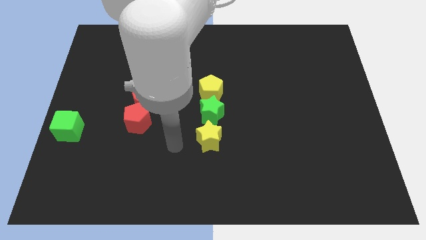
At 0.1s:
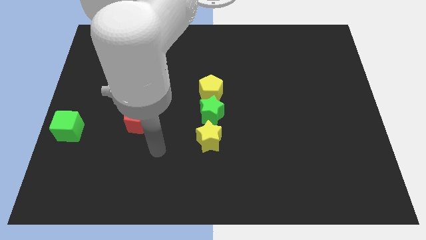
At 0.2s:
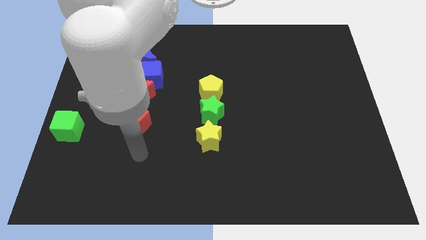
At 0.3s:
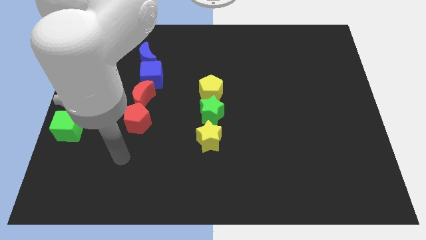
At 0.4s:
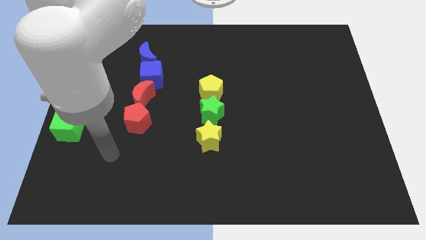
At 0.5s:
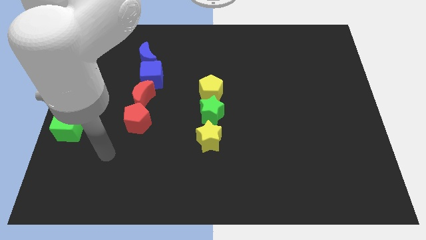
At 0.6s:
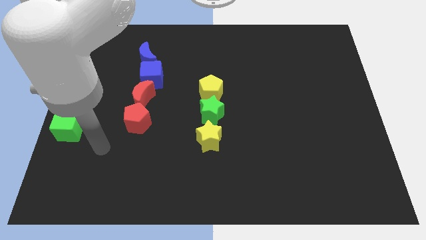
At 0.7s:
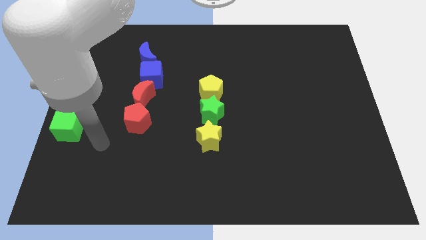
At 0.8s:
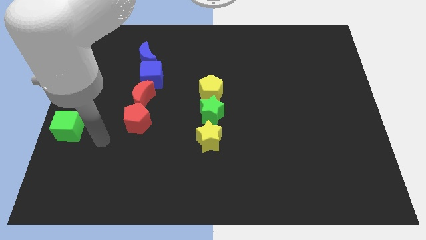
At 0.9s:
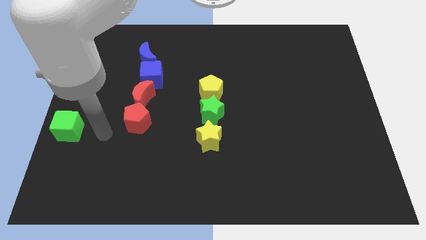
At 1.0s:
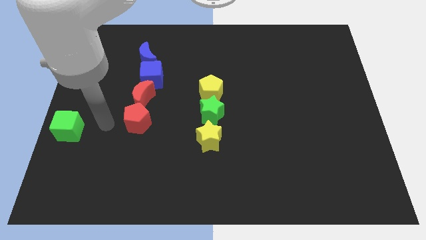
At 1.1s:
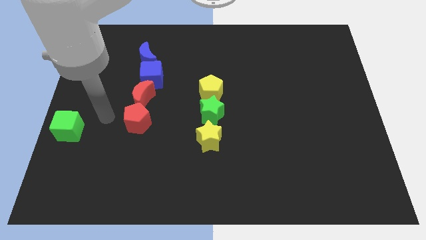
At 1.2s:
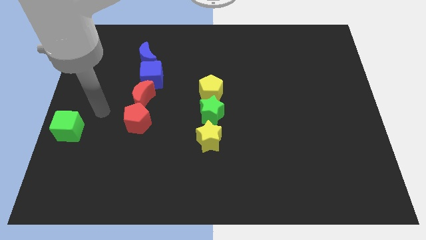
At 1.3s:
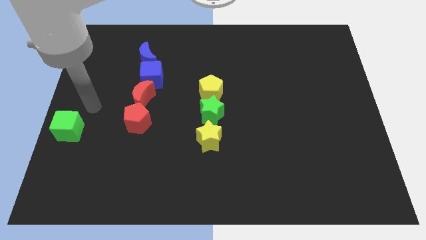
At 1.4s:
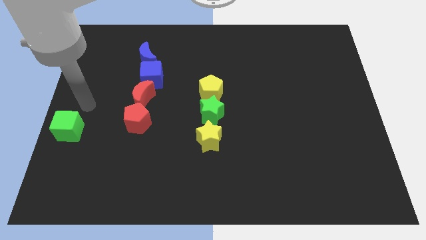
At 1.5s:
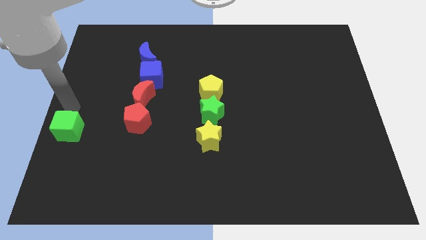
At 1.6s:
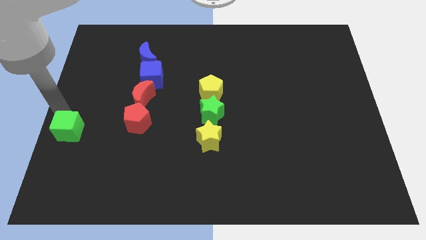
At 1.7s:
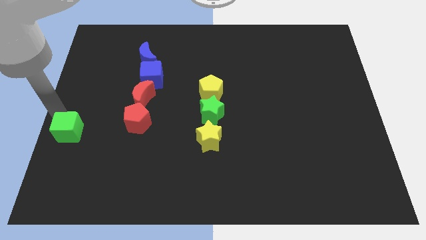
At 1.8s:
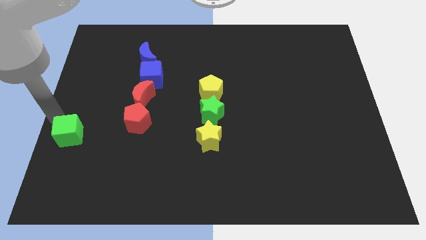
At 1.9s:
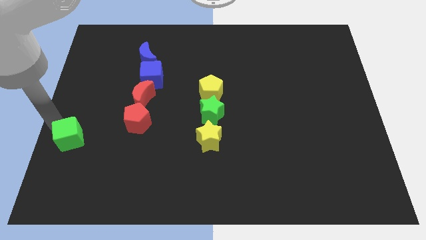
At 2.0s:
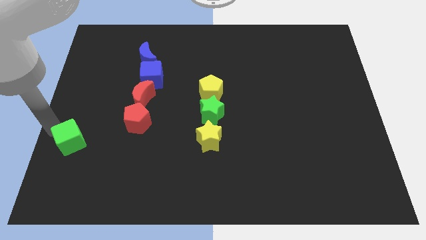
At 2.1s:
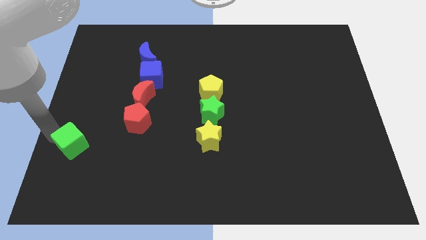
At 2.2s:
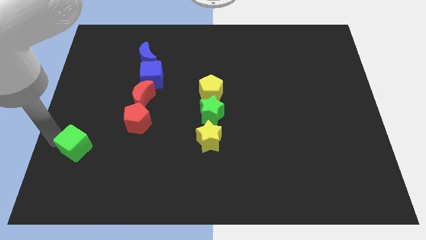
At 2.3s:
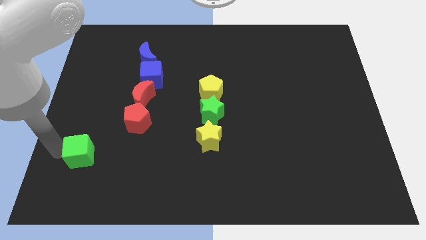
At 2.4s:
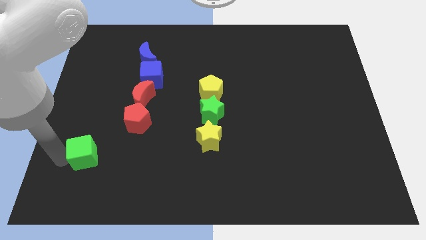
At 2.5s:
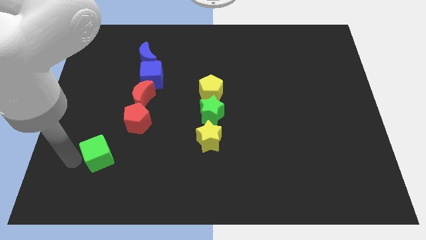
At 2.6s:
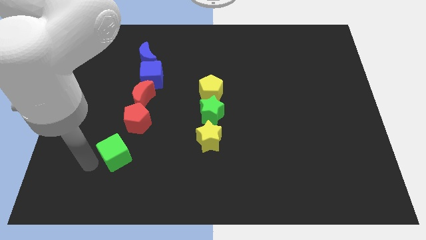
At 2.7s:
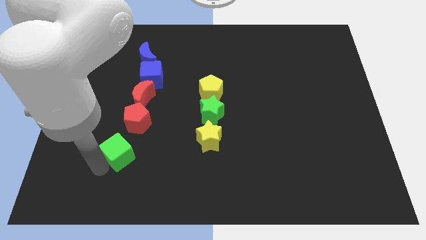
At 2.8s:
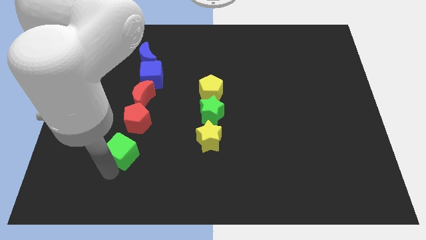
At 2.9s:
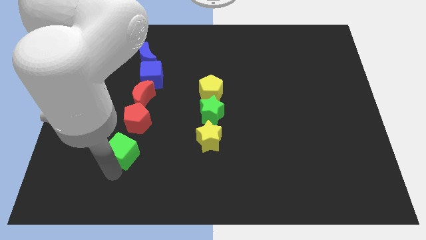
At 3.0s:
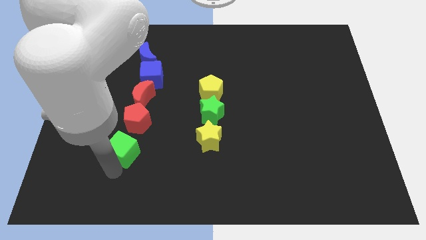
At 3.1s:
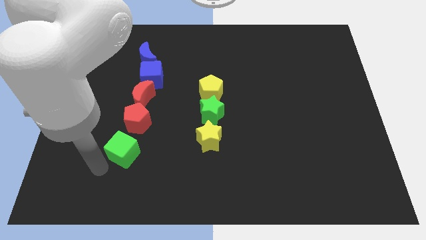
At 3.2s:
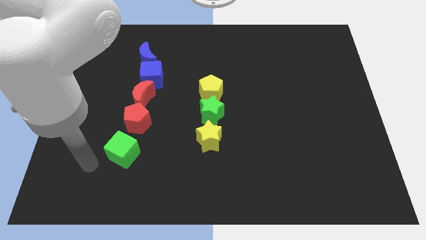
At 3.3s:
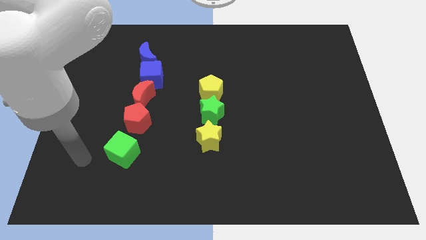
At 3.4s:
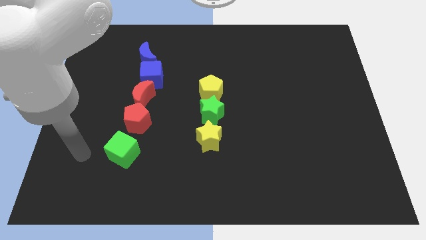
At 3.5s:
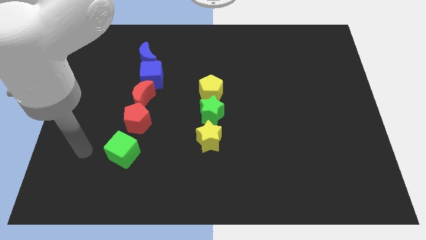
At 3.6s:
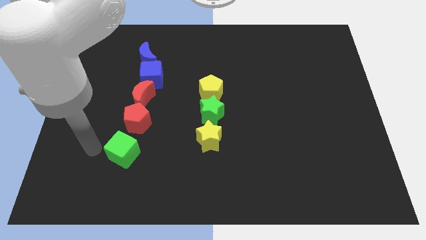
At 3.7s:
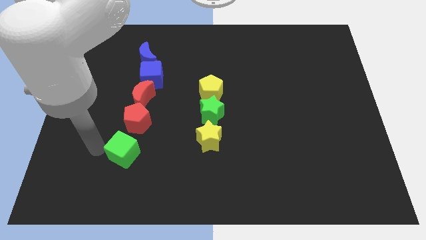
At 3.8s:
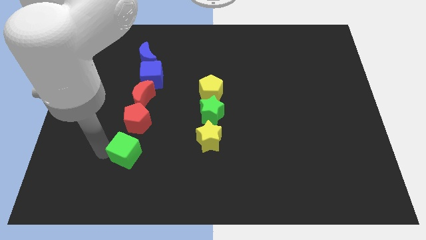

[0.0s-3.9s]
move the green cube below the red pentagon

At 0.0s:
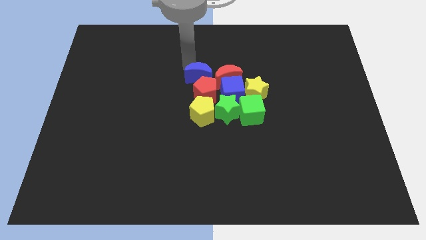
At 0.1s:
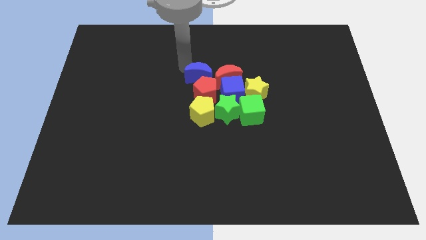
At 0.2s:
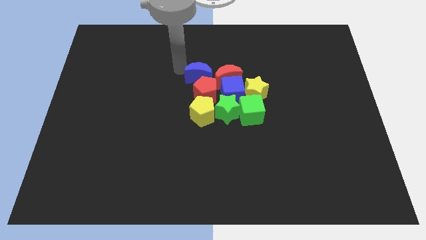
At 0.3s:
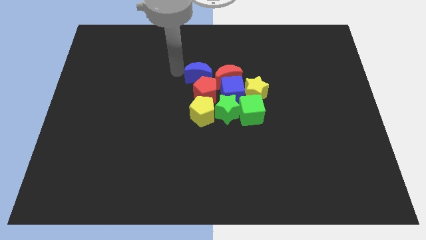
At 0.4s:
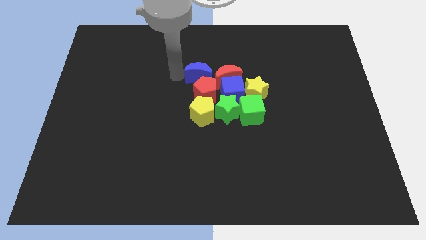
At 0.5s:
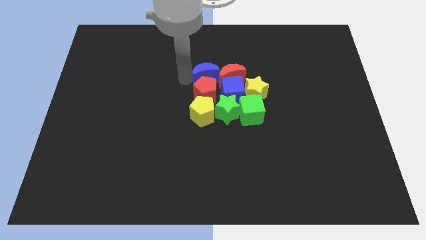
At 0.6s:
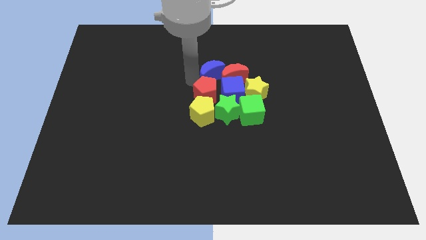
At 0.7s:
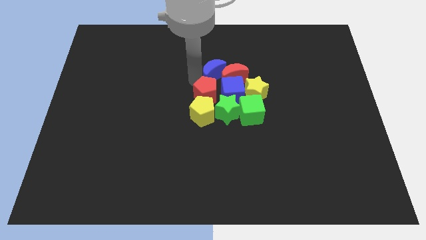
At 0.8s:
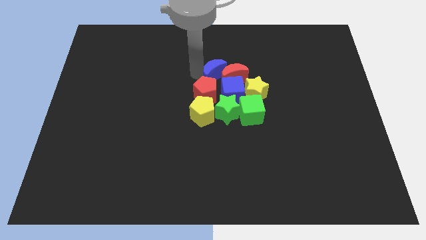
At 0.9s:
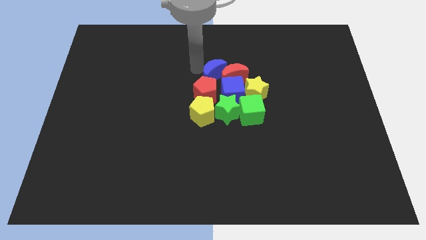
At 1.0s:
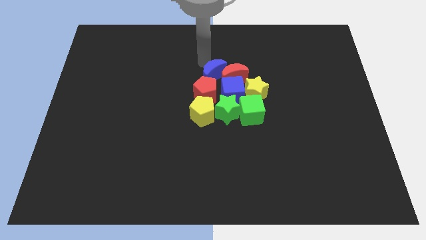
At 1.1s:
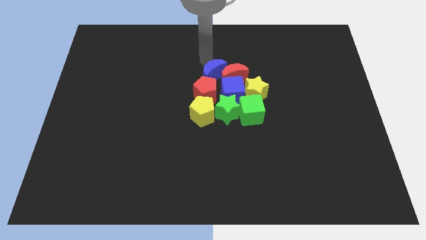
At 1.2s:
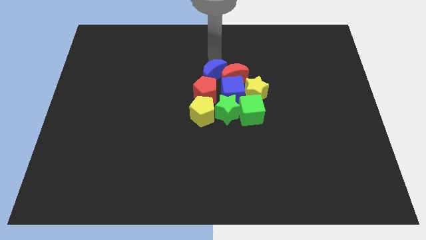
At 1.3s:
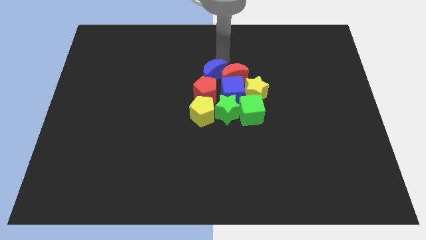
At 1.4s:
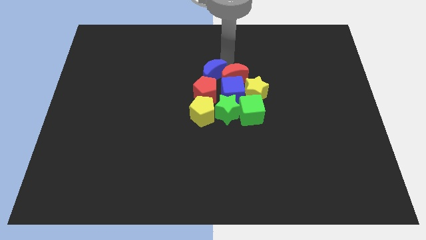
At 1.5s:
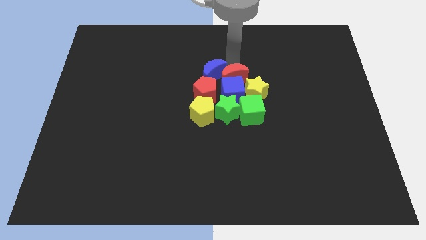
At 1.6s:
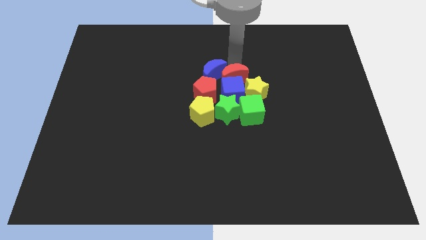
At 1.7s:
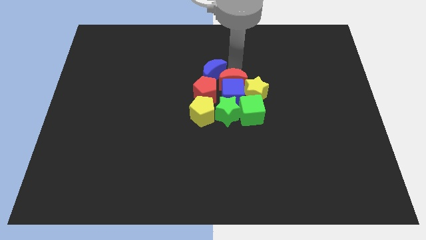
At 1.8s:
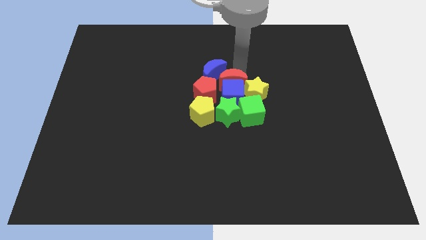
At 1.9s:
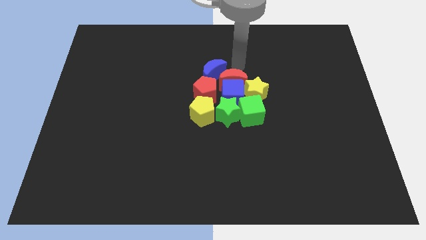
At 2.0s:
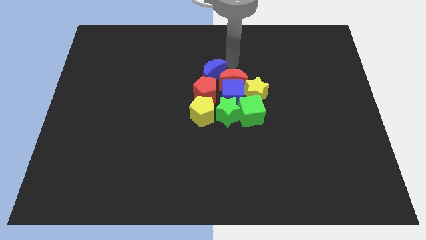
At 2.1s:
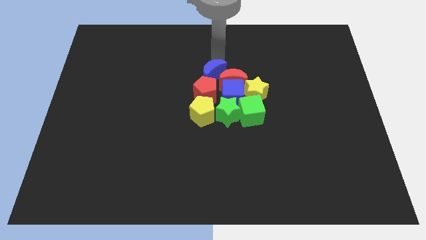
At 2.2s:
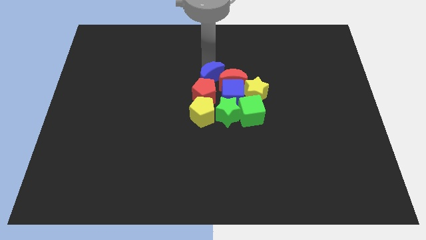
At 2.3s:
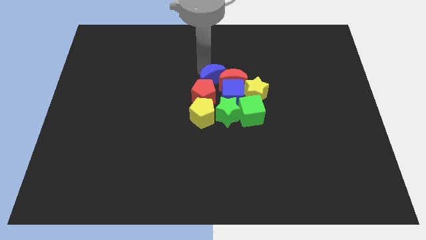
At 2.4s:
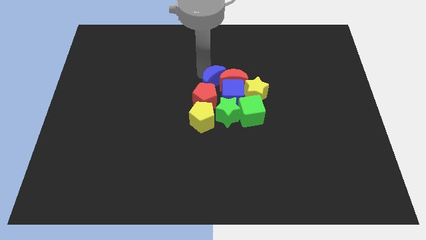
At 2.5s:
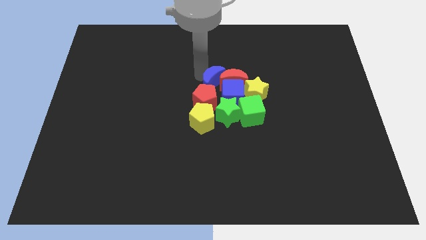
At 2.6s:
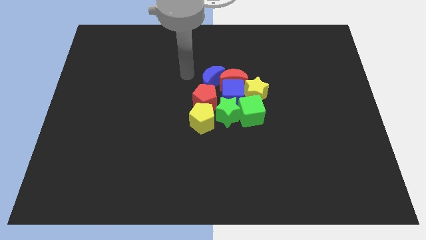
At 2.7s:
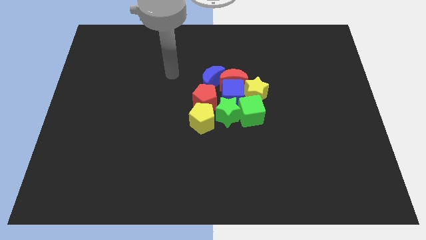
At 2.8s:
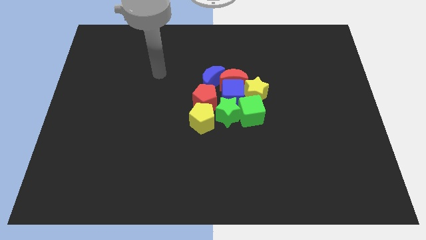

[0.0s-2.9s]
push group of blocks to the center

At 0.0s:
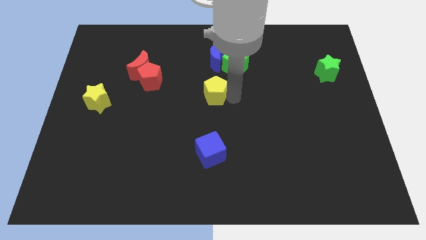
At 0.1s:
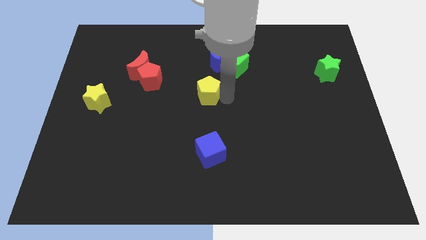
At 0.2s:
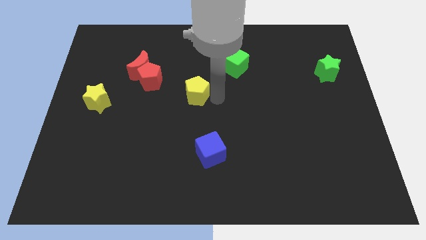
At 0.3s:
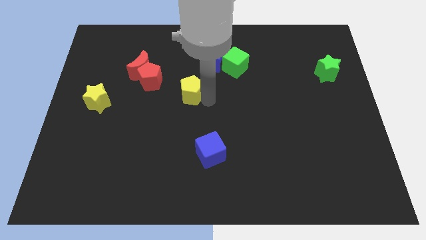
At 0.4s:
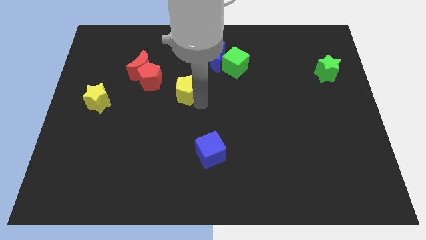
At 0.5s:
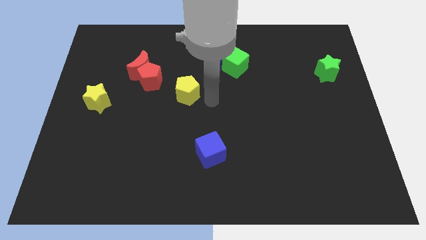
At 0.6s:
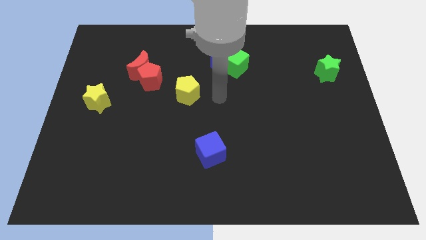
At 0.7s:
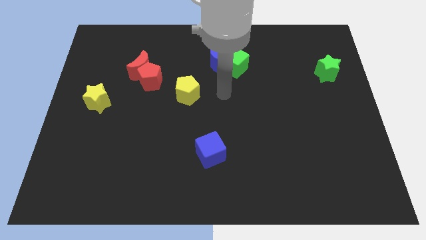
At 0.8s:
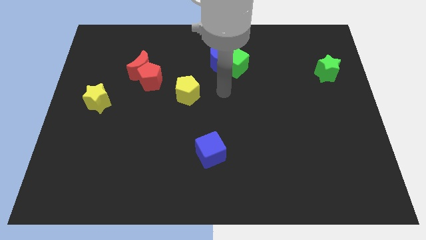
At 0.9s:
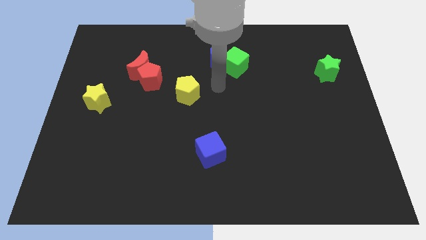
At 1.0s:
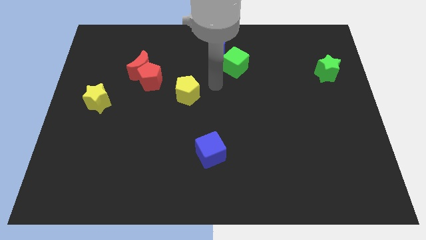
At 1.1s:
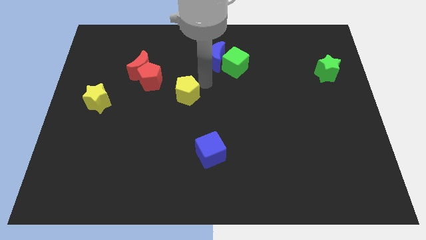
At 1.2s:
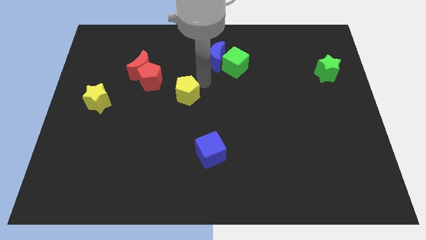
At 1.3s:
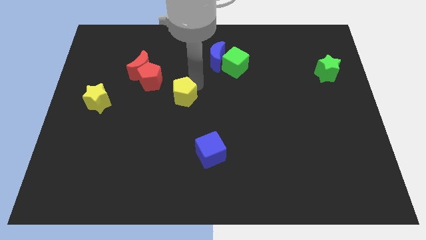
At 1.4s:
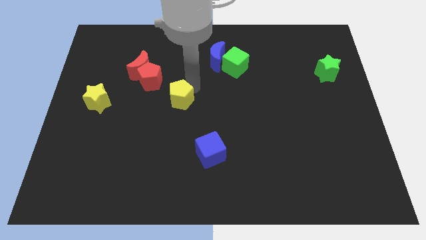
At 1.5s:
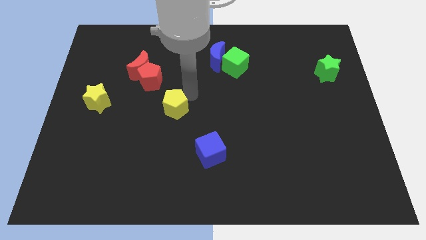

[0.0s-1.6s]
slide the yellow pentagon between the red pentagon and blue cube

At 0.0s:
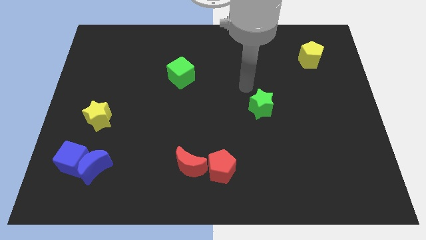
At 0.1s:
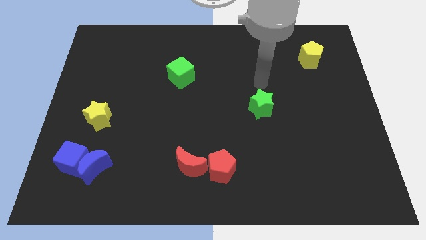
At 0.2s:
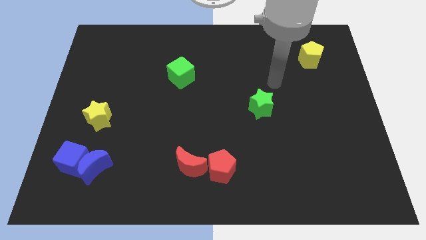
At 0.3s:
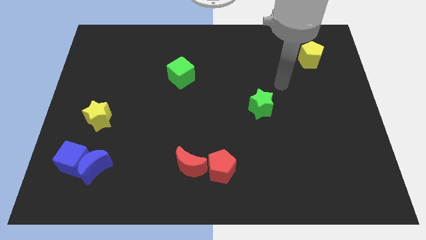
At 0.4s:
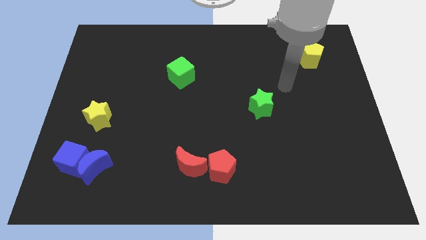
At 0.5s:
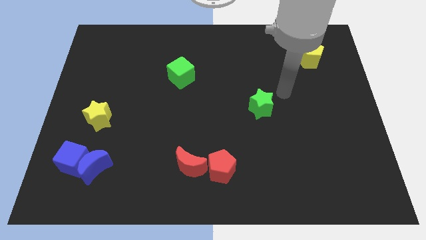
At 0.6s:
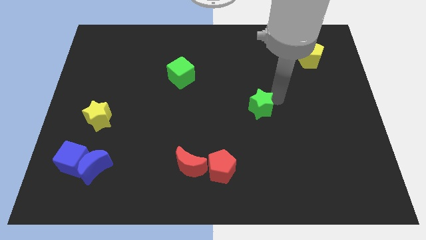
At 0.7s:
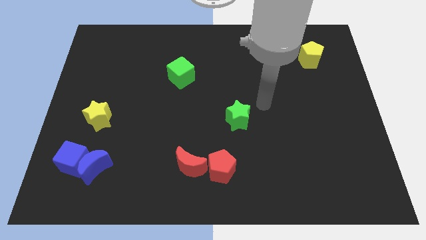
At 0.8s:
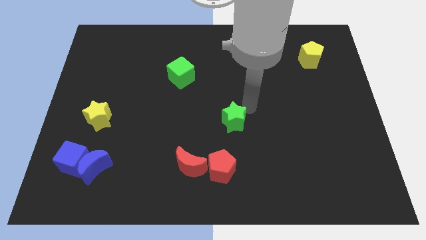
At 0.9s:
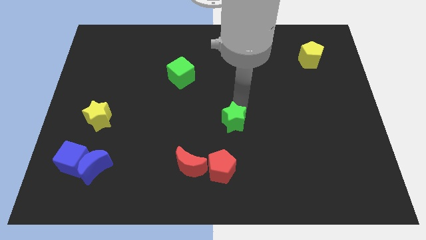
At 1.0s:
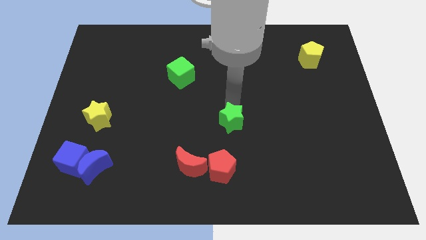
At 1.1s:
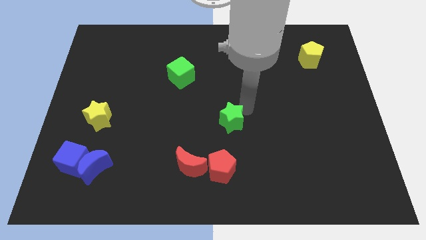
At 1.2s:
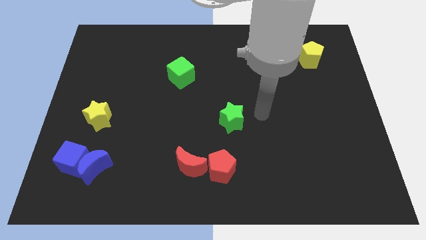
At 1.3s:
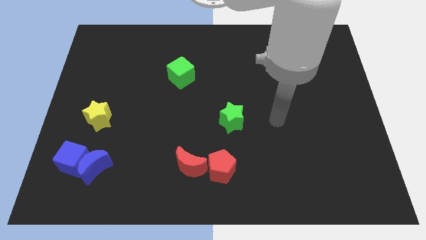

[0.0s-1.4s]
put the green star diagonal to the top of the red pentagon
